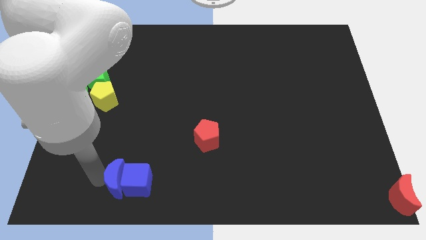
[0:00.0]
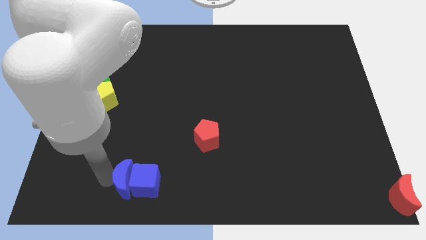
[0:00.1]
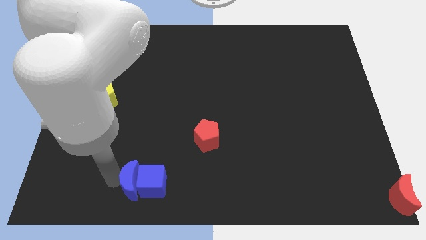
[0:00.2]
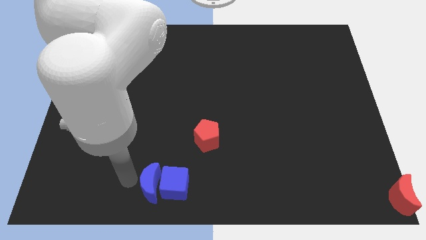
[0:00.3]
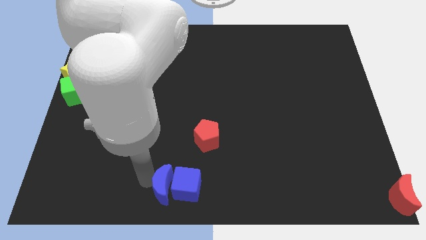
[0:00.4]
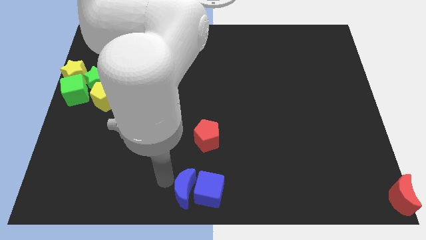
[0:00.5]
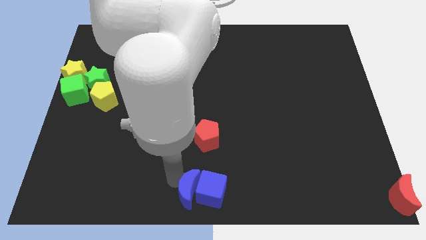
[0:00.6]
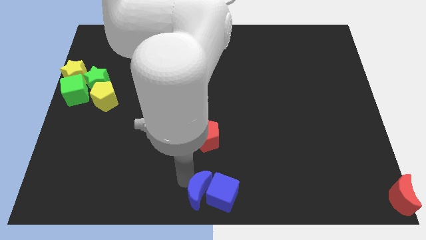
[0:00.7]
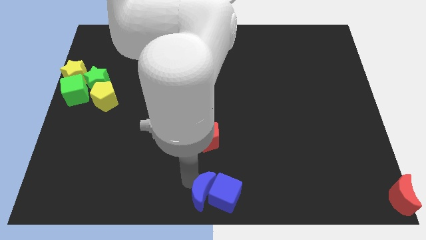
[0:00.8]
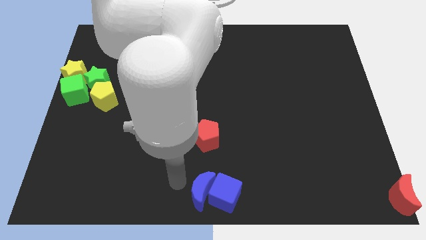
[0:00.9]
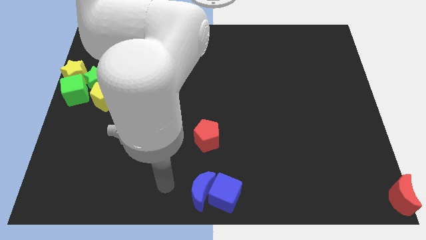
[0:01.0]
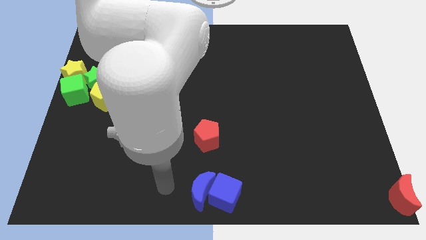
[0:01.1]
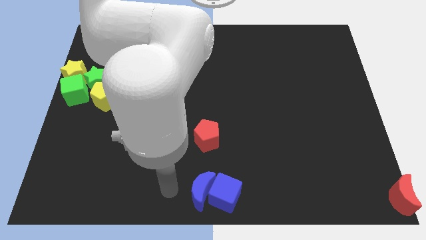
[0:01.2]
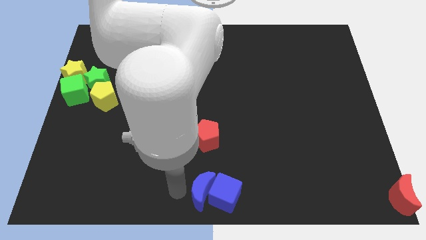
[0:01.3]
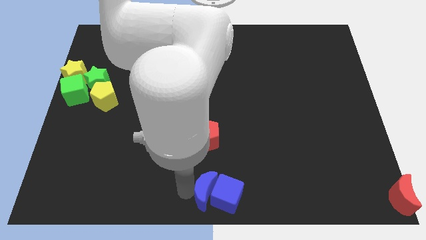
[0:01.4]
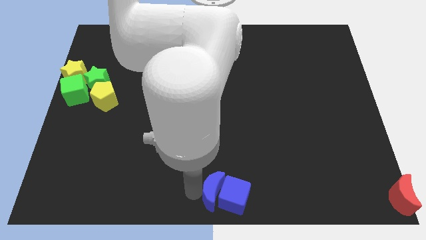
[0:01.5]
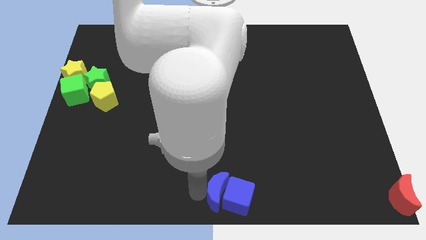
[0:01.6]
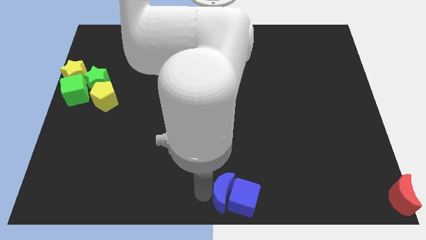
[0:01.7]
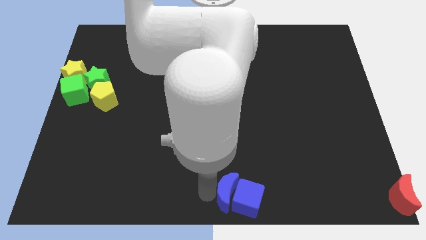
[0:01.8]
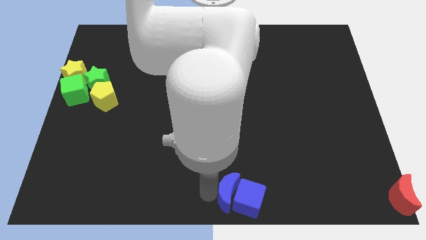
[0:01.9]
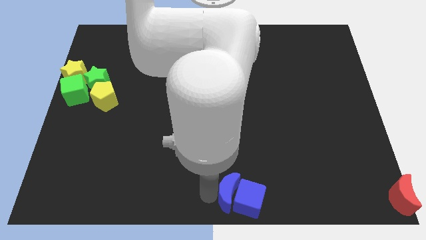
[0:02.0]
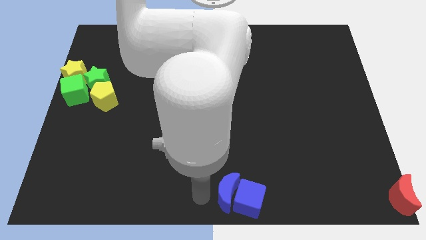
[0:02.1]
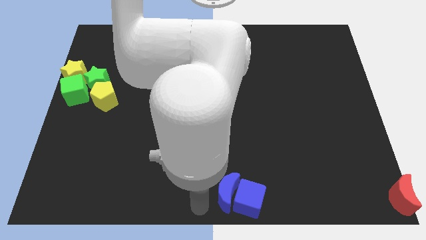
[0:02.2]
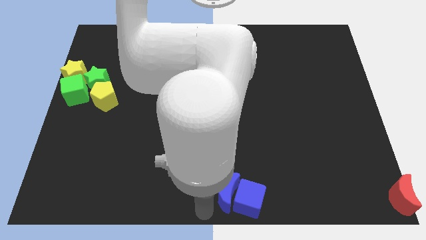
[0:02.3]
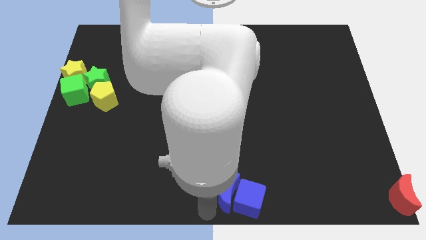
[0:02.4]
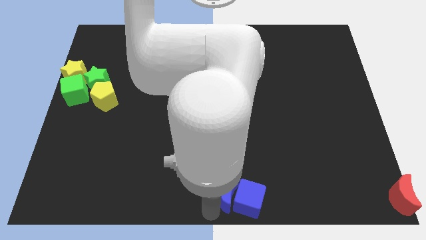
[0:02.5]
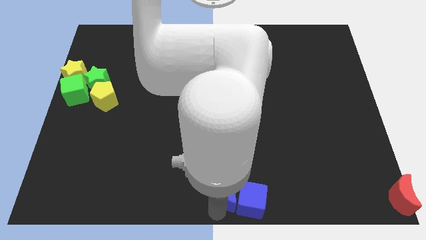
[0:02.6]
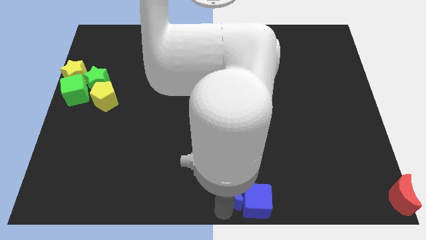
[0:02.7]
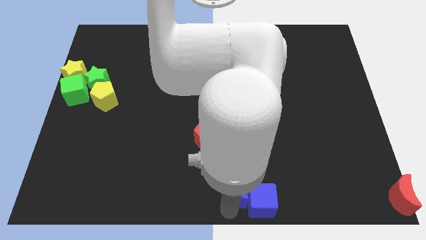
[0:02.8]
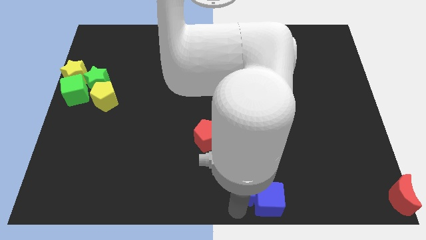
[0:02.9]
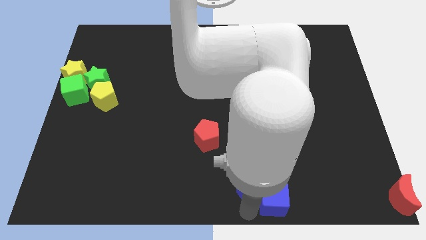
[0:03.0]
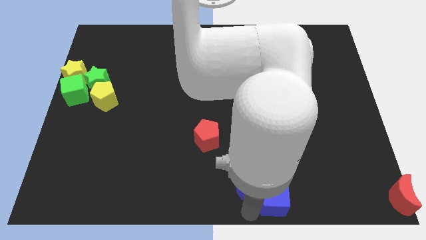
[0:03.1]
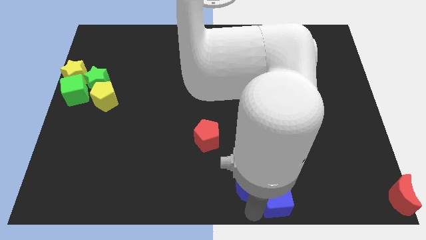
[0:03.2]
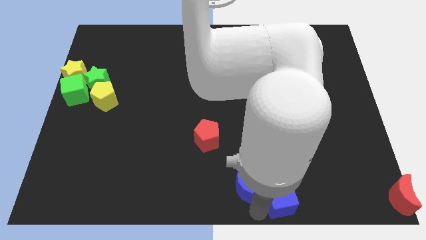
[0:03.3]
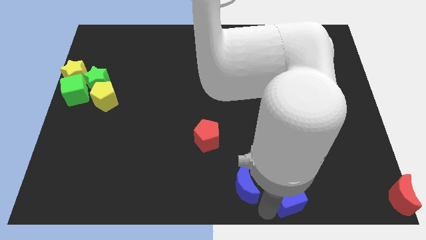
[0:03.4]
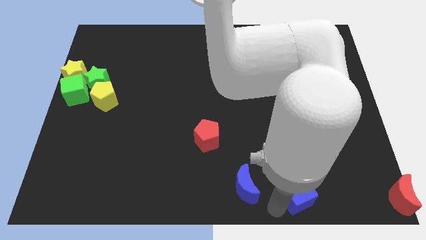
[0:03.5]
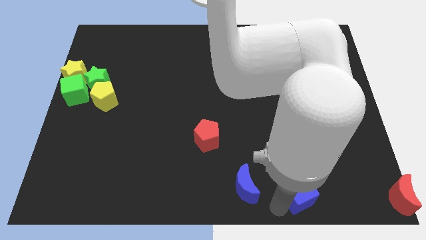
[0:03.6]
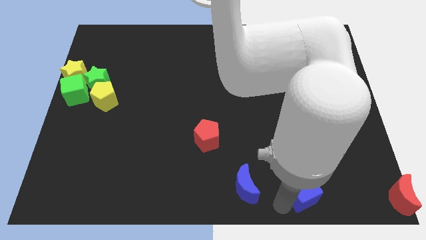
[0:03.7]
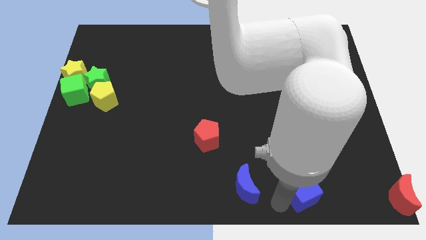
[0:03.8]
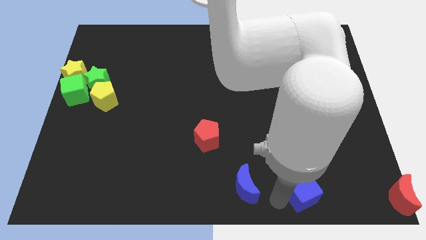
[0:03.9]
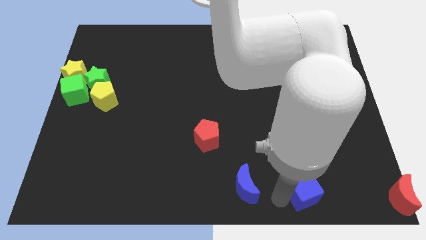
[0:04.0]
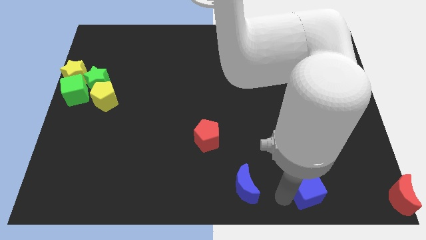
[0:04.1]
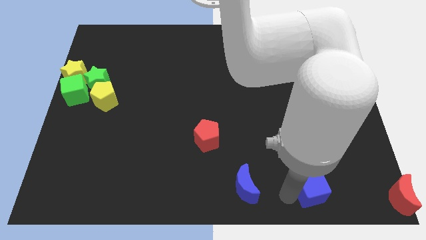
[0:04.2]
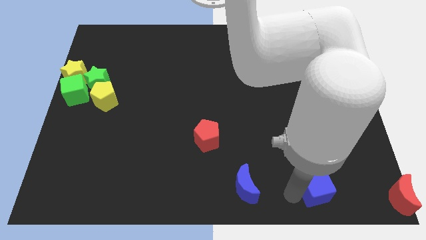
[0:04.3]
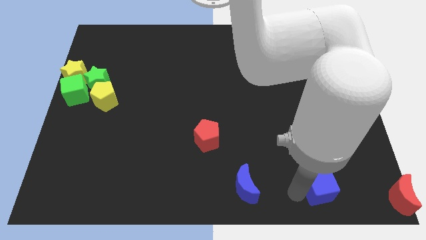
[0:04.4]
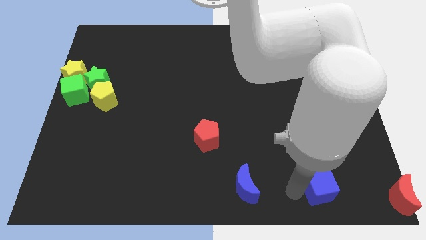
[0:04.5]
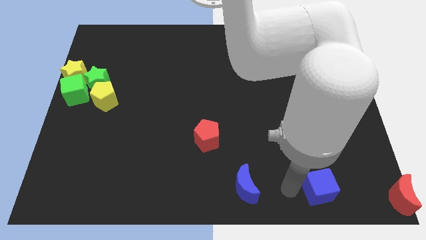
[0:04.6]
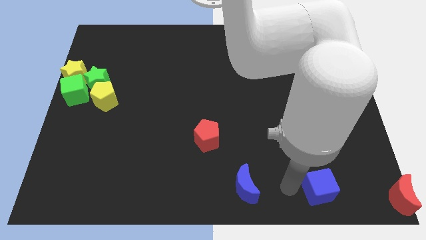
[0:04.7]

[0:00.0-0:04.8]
separate the blue cube from blue crescent

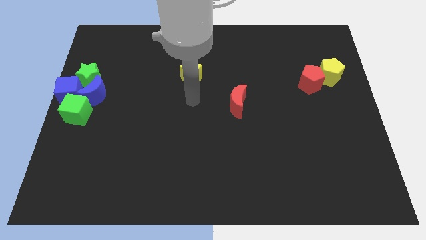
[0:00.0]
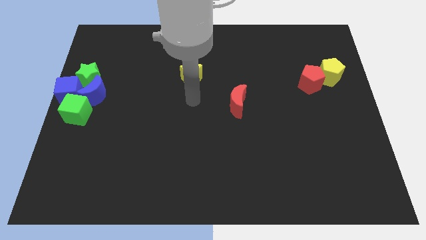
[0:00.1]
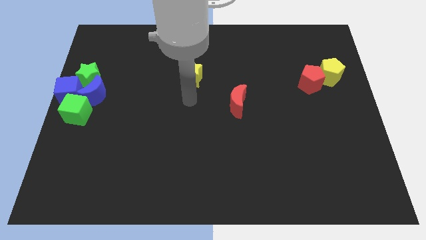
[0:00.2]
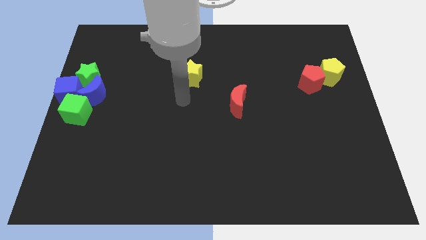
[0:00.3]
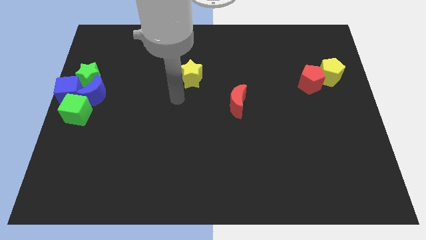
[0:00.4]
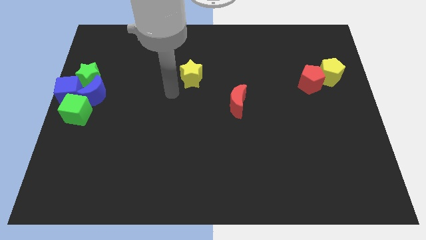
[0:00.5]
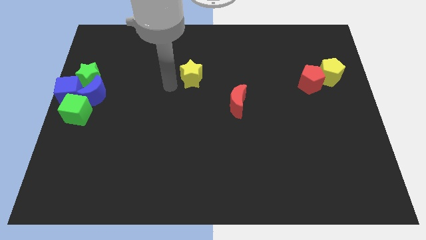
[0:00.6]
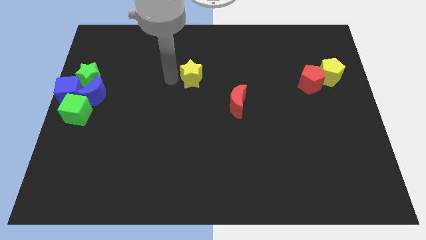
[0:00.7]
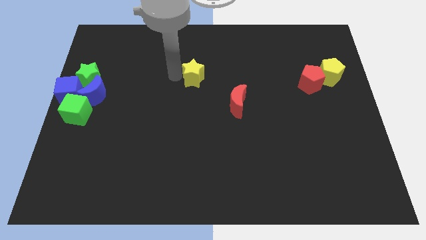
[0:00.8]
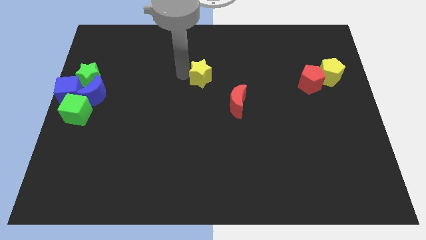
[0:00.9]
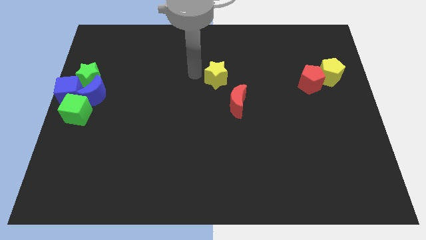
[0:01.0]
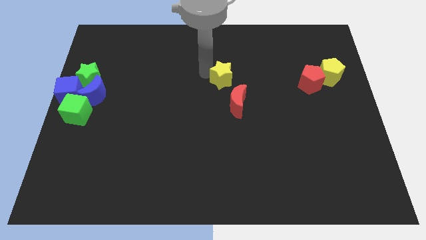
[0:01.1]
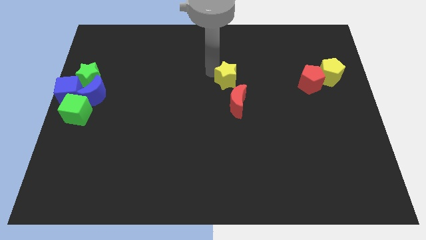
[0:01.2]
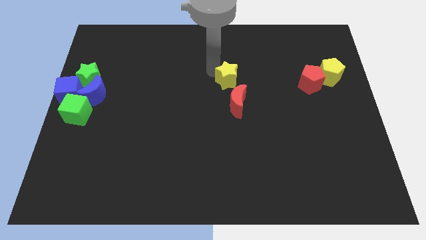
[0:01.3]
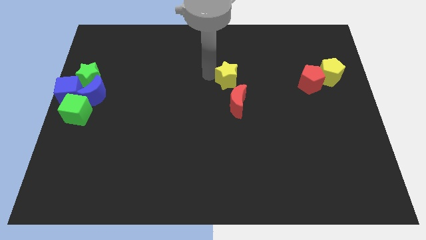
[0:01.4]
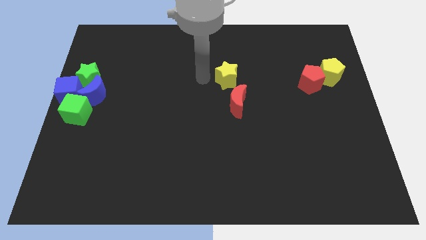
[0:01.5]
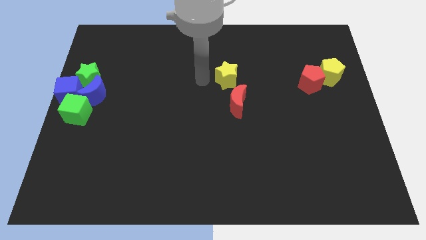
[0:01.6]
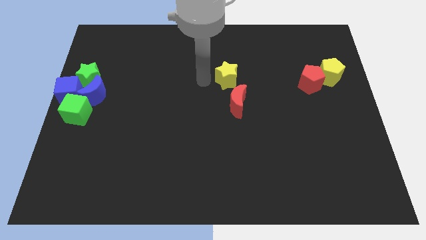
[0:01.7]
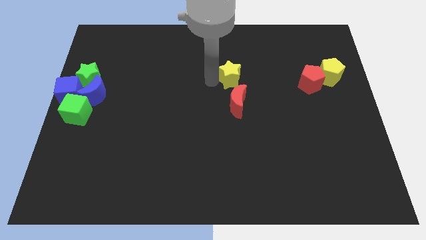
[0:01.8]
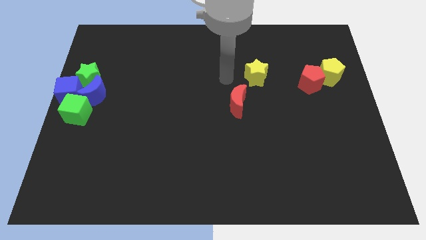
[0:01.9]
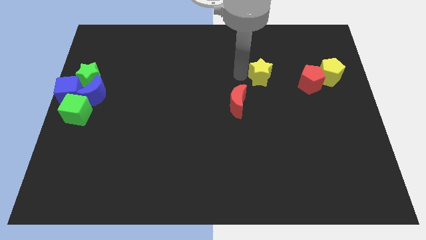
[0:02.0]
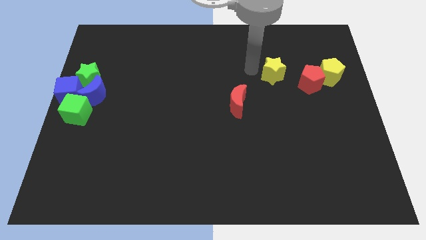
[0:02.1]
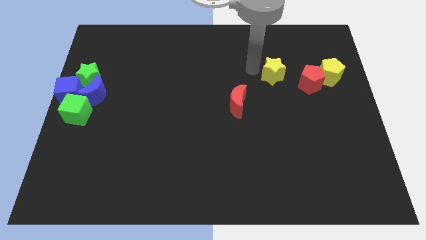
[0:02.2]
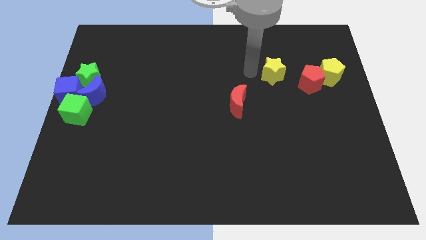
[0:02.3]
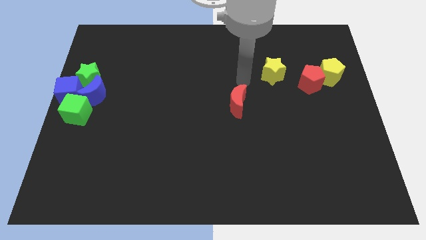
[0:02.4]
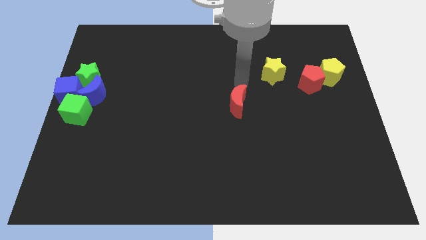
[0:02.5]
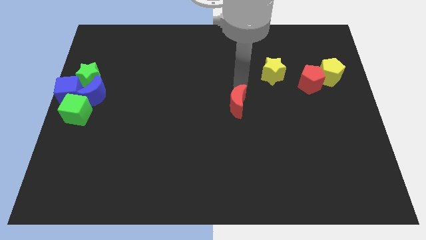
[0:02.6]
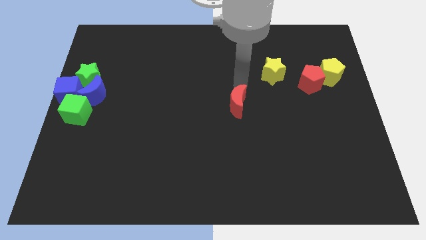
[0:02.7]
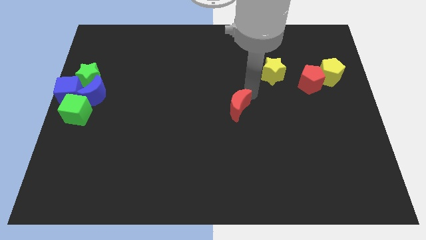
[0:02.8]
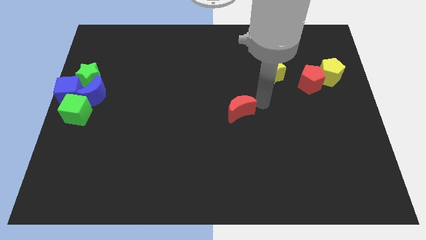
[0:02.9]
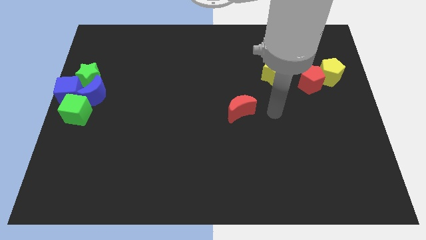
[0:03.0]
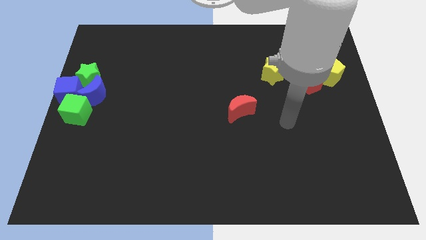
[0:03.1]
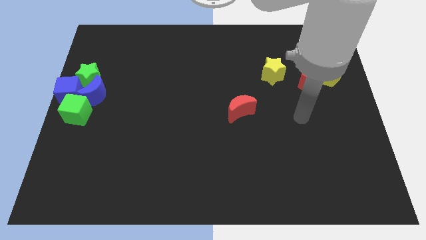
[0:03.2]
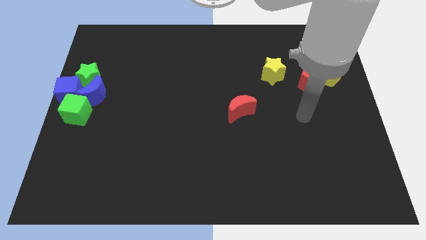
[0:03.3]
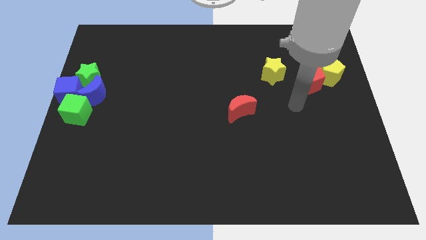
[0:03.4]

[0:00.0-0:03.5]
push yellow star to the right side

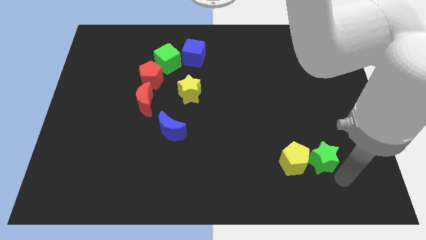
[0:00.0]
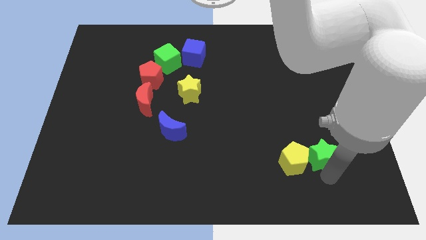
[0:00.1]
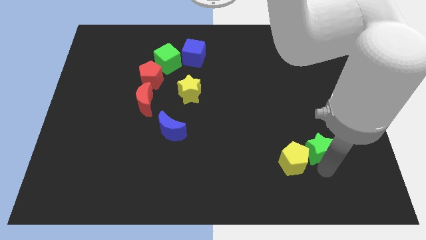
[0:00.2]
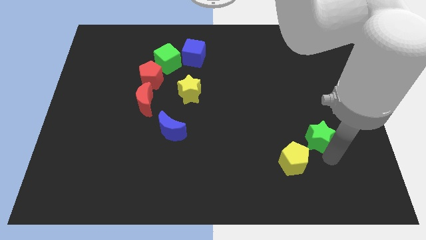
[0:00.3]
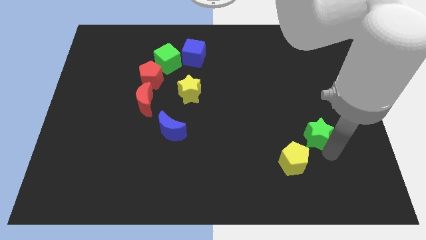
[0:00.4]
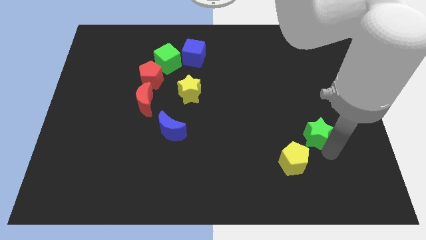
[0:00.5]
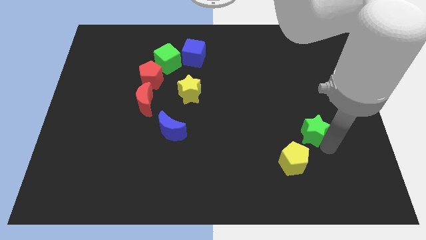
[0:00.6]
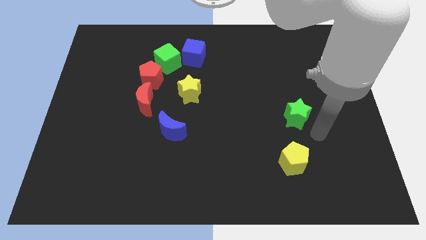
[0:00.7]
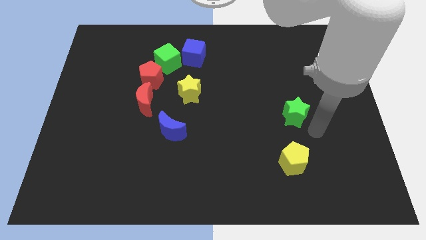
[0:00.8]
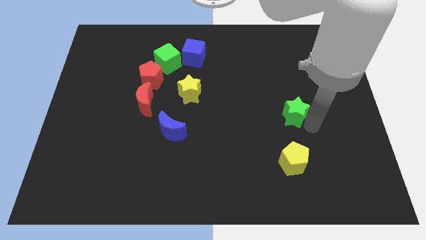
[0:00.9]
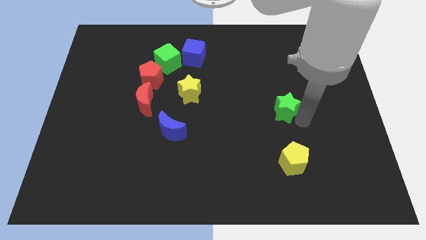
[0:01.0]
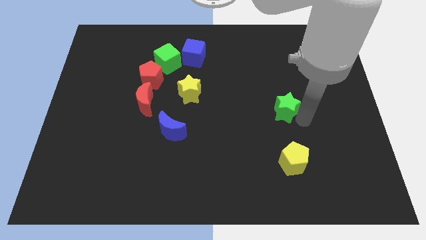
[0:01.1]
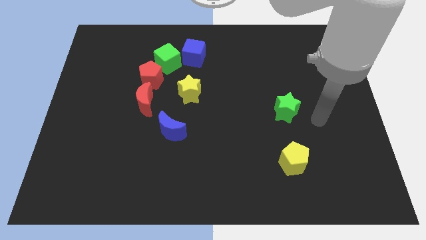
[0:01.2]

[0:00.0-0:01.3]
place the green star above the yellow pentagon
